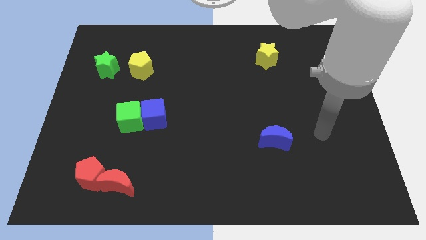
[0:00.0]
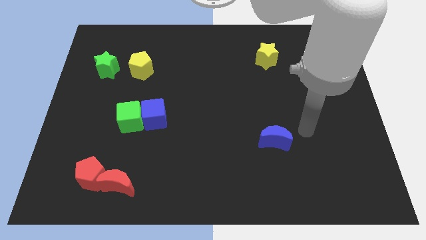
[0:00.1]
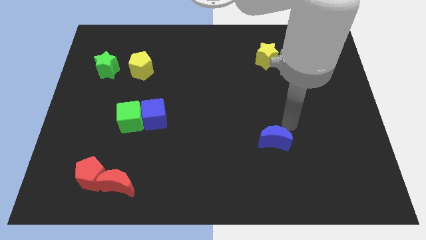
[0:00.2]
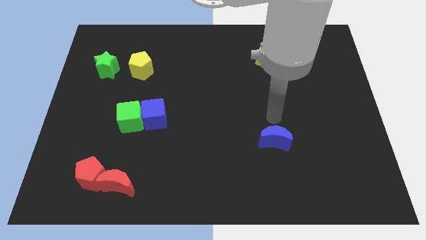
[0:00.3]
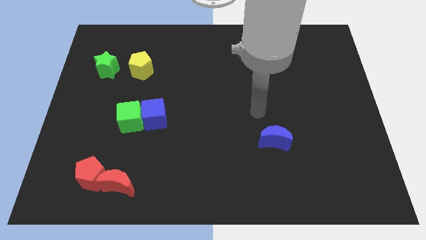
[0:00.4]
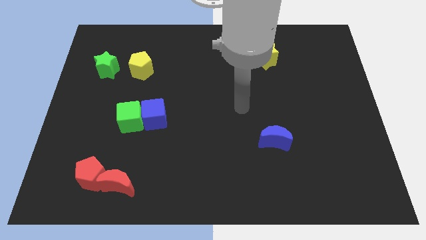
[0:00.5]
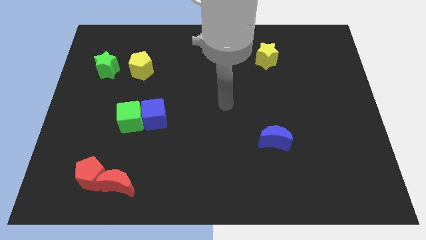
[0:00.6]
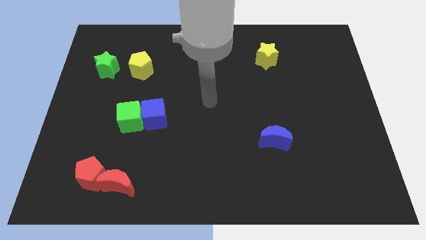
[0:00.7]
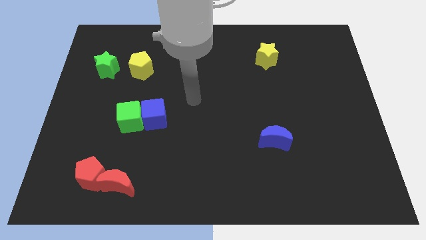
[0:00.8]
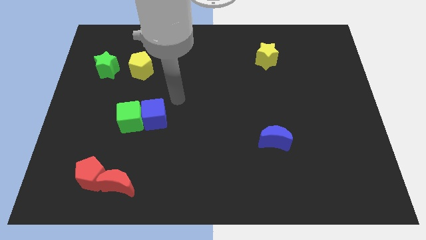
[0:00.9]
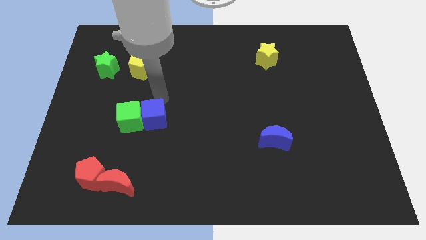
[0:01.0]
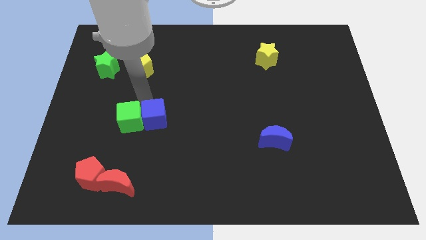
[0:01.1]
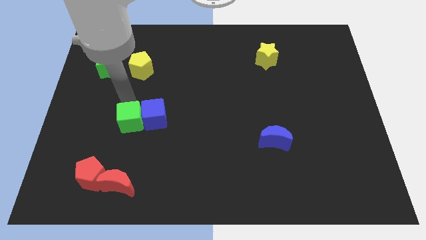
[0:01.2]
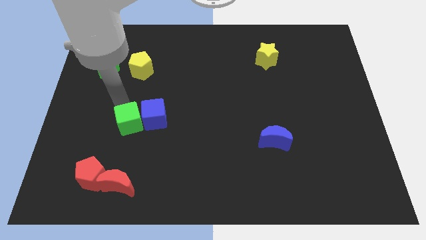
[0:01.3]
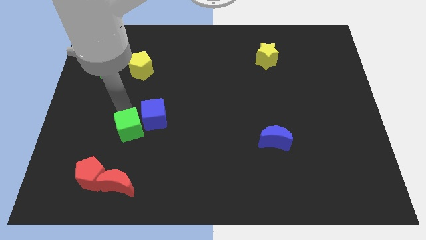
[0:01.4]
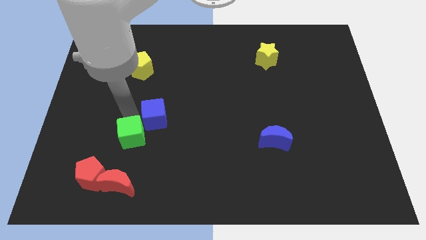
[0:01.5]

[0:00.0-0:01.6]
point your arm above green cube

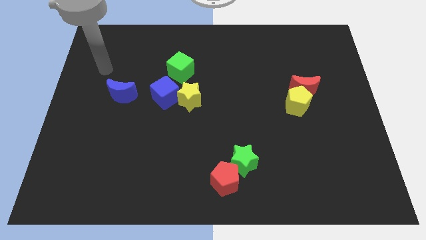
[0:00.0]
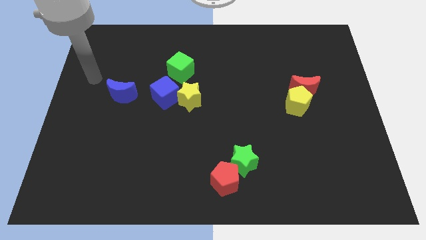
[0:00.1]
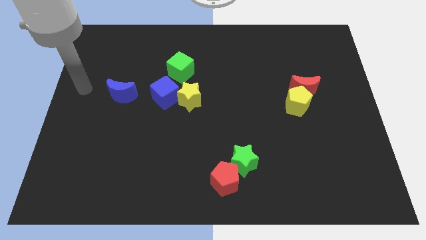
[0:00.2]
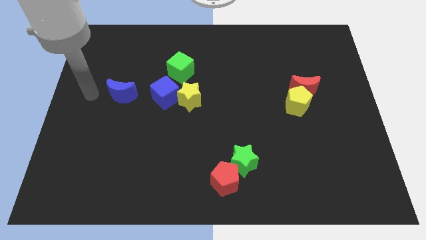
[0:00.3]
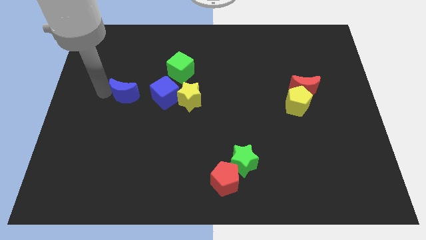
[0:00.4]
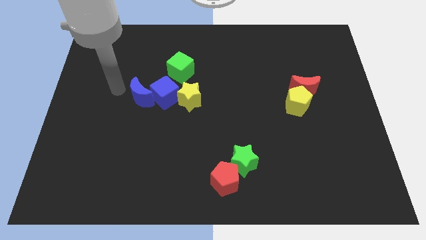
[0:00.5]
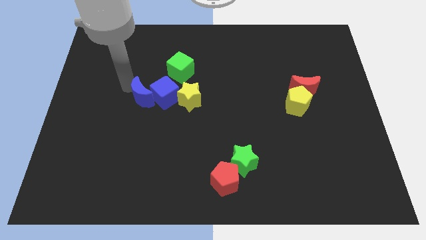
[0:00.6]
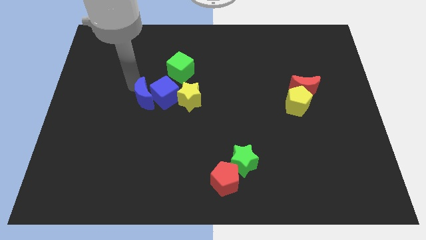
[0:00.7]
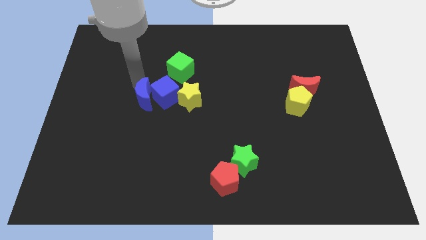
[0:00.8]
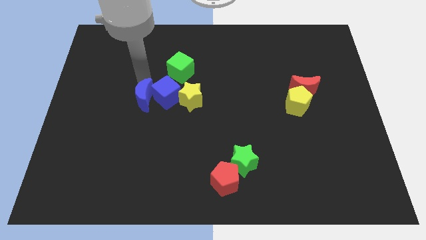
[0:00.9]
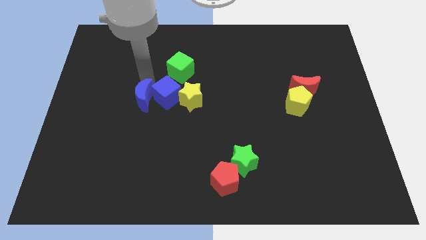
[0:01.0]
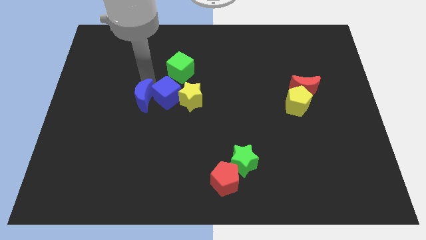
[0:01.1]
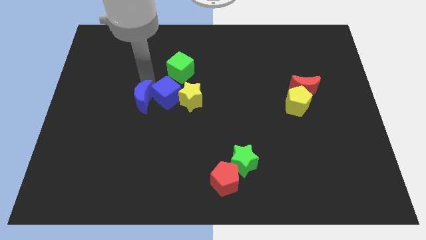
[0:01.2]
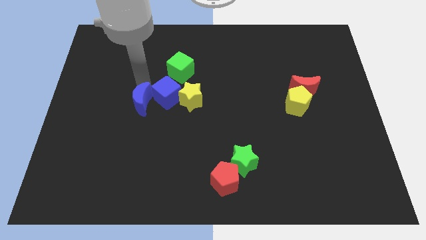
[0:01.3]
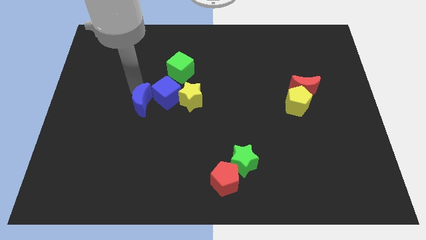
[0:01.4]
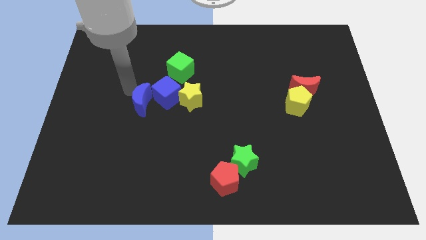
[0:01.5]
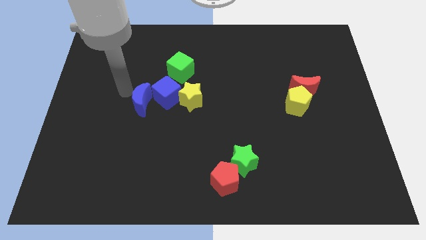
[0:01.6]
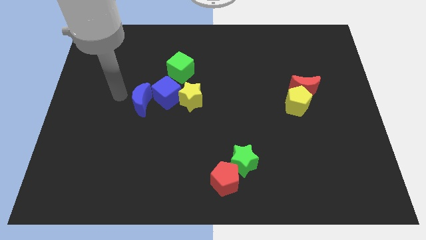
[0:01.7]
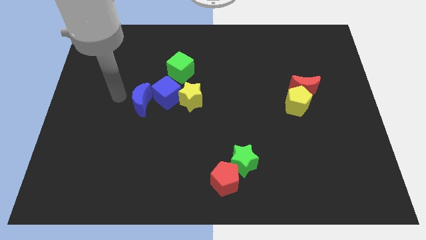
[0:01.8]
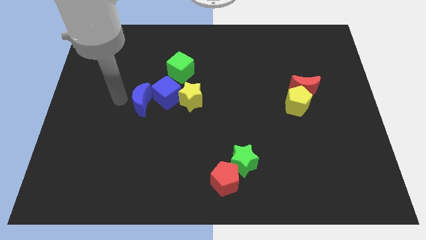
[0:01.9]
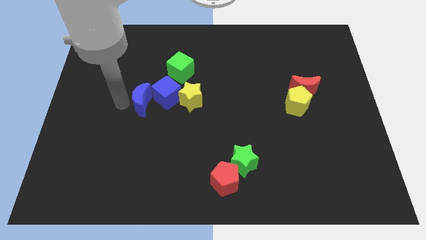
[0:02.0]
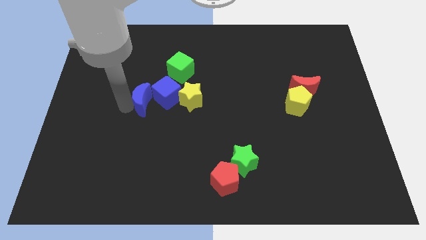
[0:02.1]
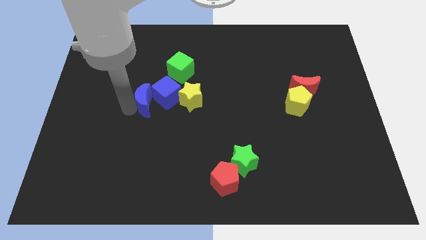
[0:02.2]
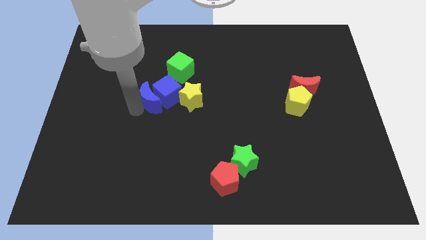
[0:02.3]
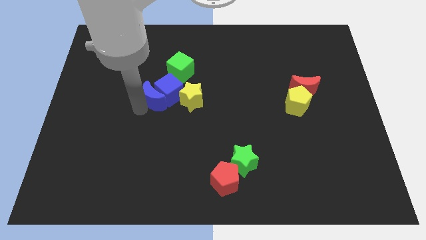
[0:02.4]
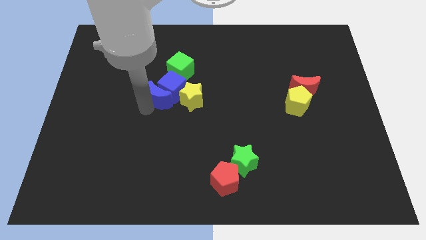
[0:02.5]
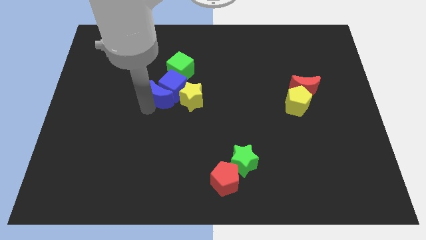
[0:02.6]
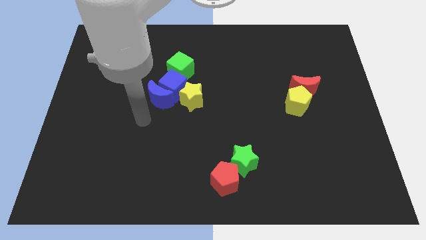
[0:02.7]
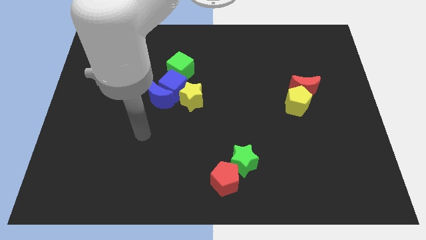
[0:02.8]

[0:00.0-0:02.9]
push the blue crescent into the blue cube

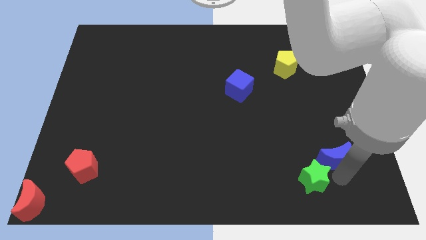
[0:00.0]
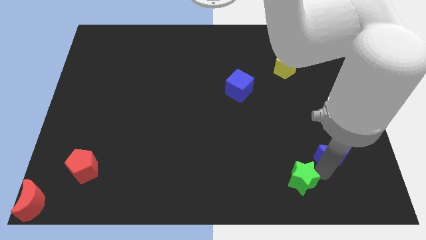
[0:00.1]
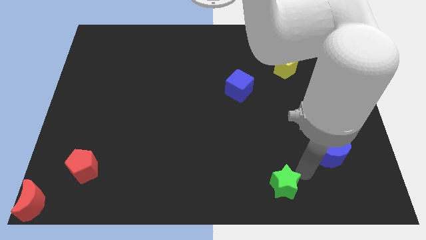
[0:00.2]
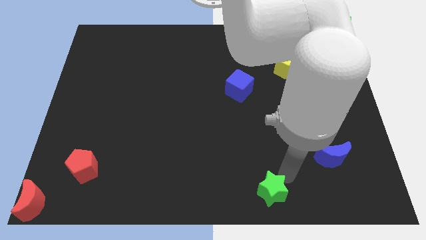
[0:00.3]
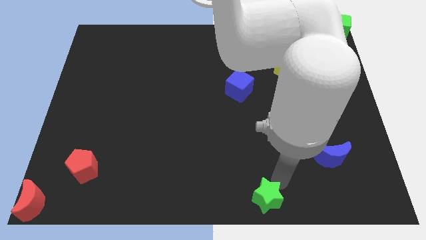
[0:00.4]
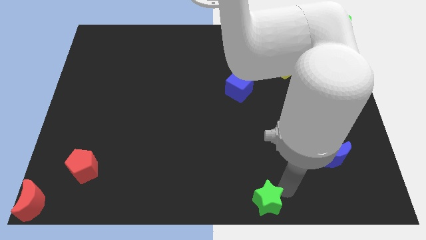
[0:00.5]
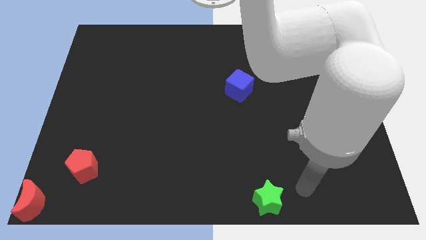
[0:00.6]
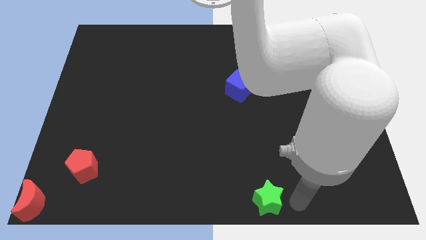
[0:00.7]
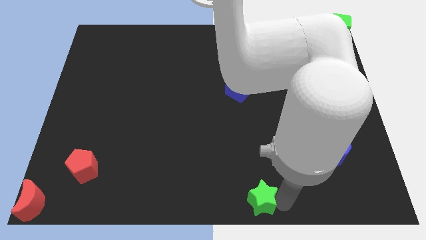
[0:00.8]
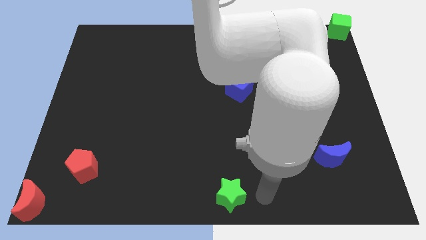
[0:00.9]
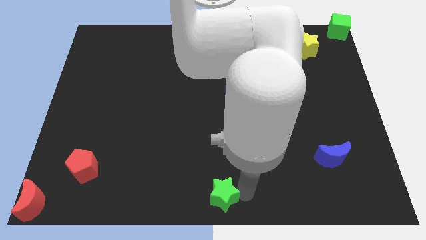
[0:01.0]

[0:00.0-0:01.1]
place the green star towards the bottom center of the board

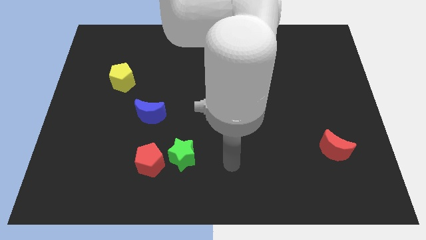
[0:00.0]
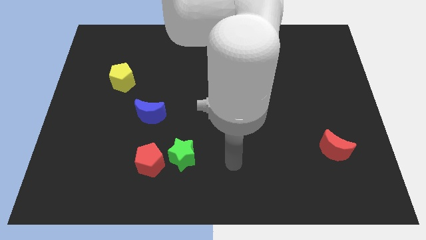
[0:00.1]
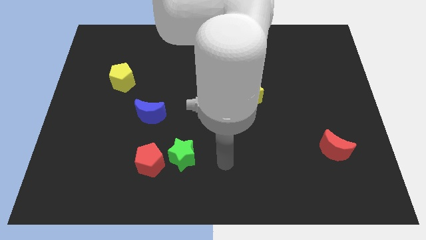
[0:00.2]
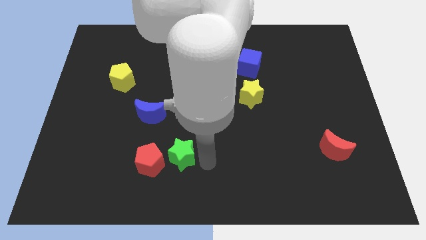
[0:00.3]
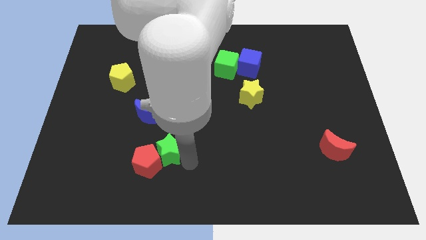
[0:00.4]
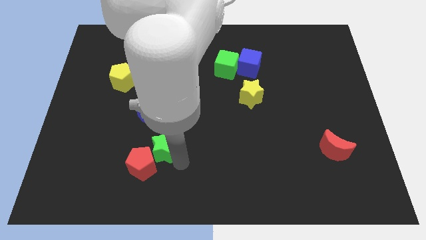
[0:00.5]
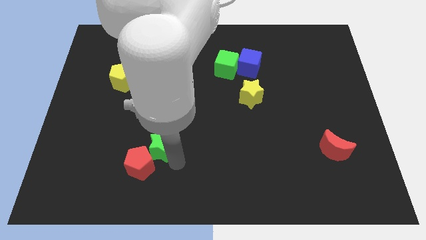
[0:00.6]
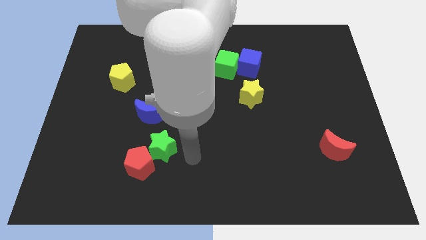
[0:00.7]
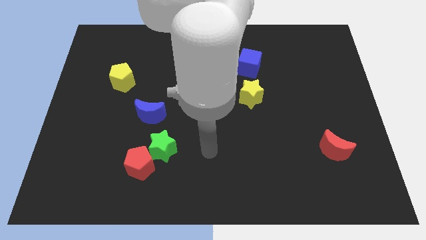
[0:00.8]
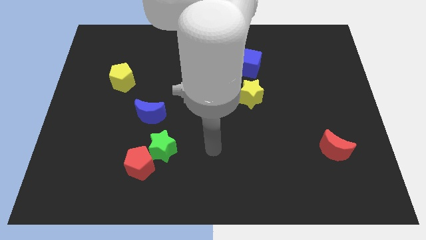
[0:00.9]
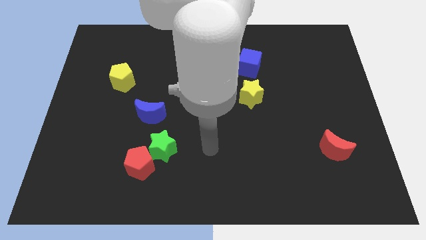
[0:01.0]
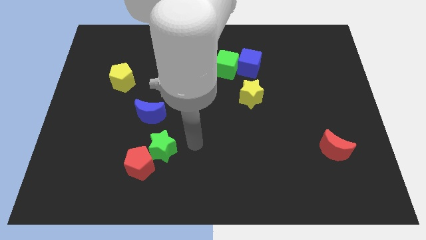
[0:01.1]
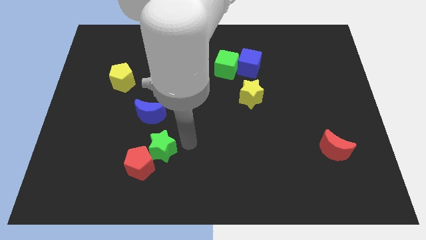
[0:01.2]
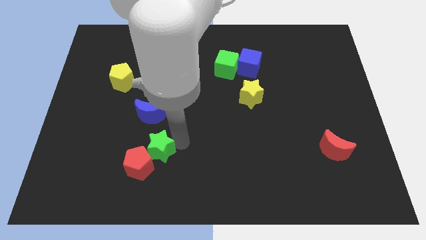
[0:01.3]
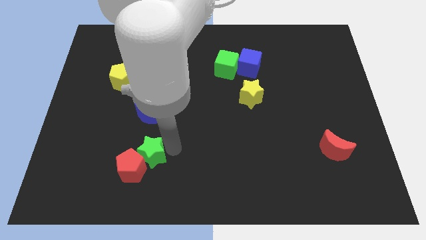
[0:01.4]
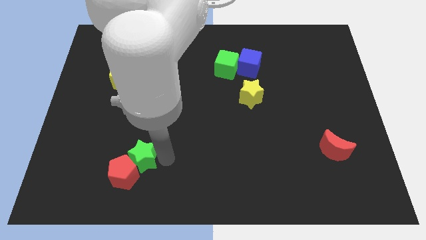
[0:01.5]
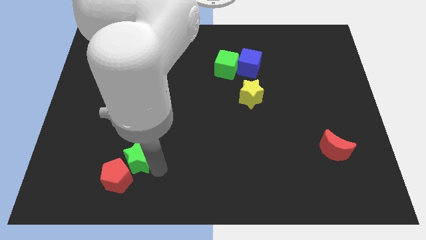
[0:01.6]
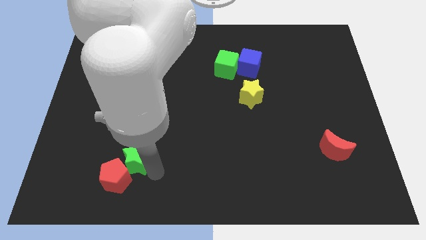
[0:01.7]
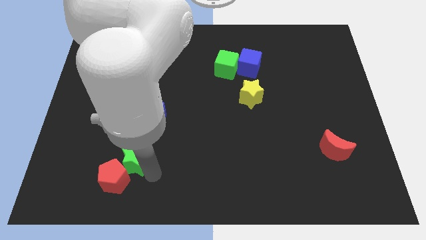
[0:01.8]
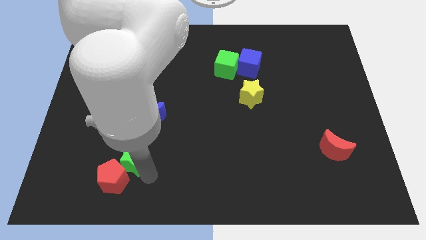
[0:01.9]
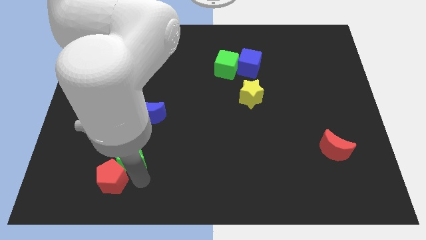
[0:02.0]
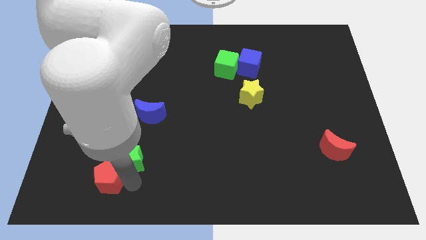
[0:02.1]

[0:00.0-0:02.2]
slide the green star and red pentagon to the bottom left side of the table

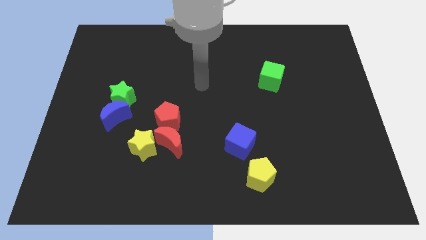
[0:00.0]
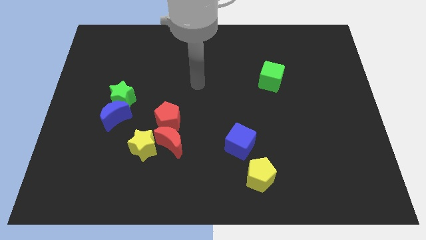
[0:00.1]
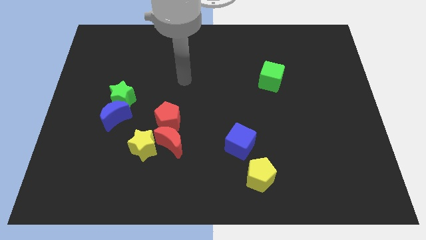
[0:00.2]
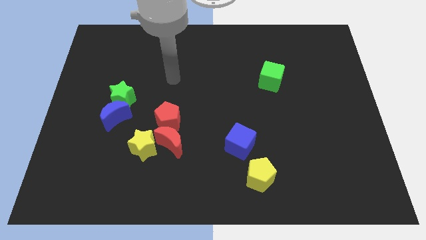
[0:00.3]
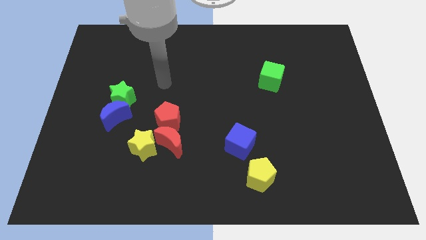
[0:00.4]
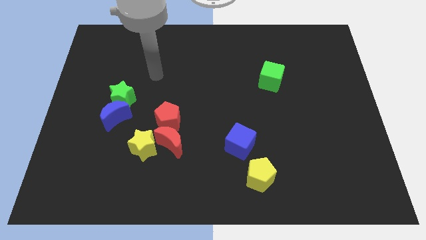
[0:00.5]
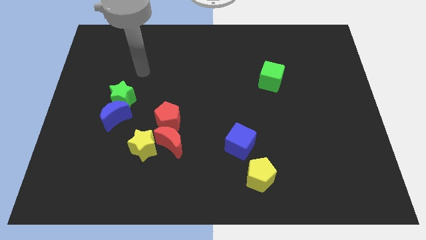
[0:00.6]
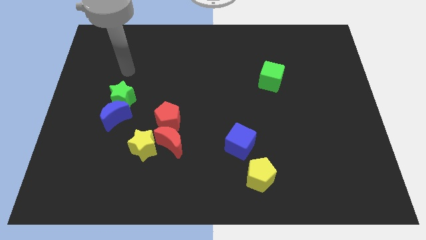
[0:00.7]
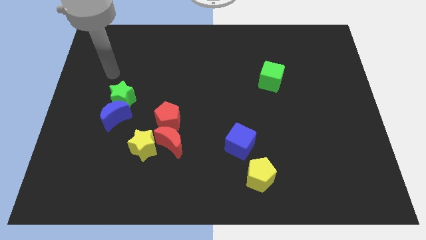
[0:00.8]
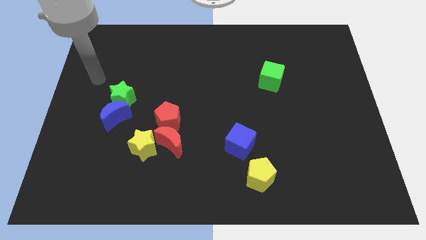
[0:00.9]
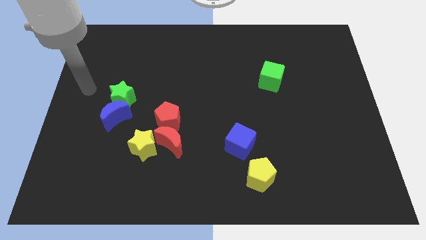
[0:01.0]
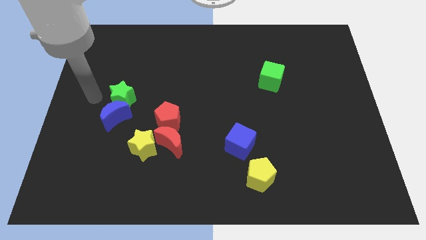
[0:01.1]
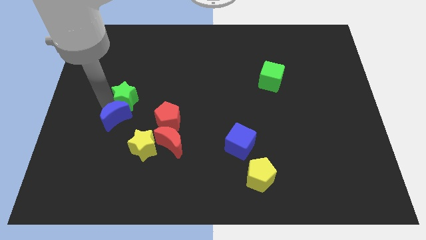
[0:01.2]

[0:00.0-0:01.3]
point the arm to the left of the green star
